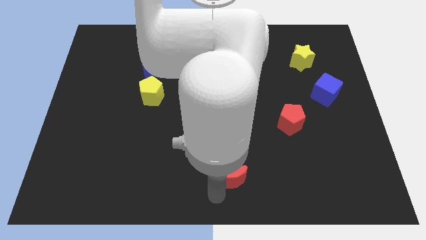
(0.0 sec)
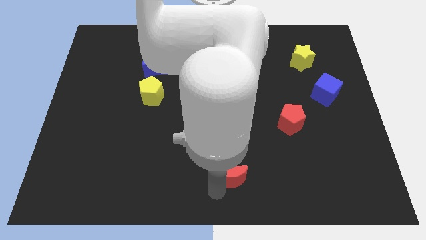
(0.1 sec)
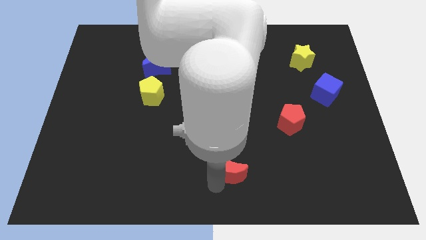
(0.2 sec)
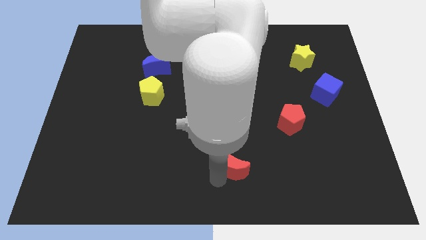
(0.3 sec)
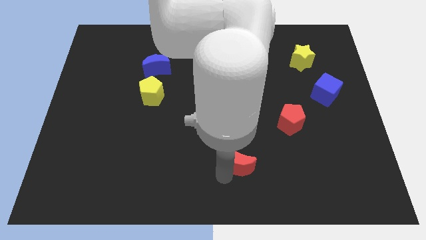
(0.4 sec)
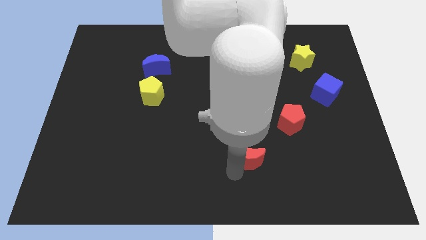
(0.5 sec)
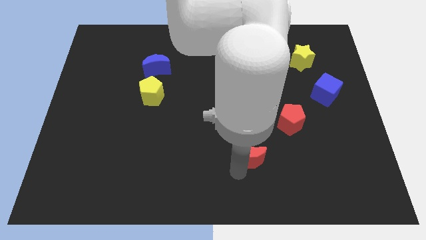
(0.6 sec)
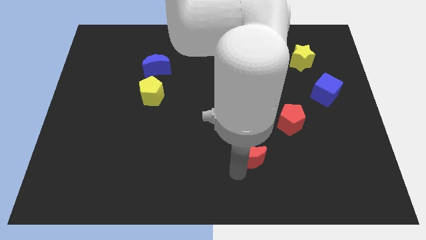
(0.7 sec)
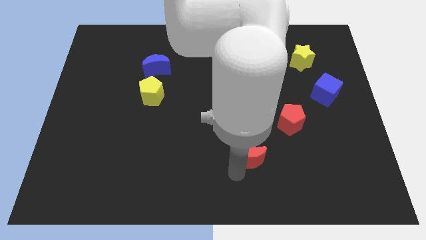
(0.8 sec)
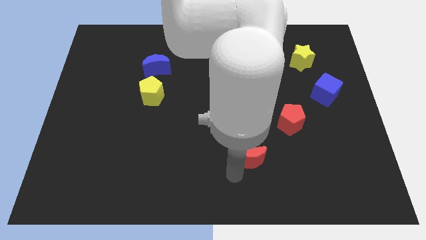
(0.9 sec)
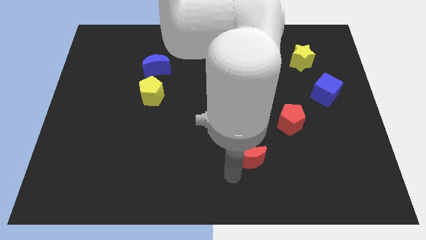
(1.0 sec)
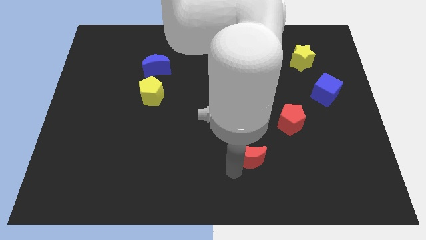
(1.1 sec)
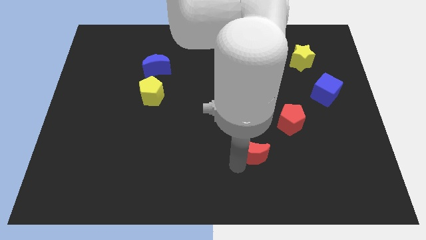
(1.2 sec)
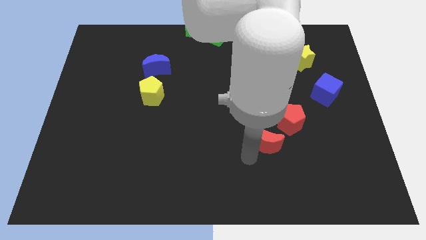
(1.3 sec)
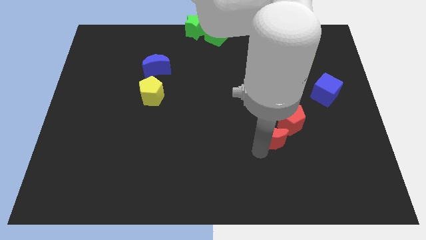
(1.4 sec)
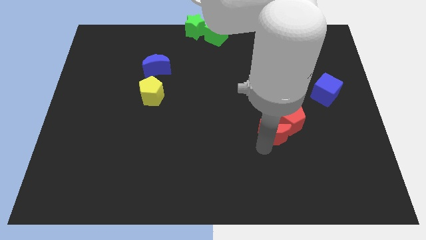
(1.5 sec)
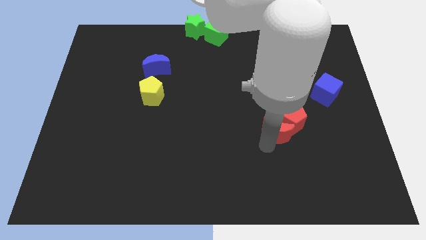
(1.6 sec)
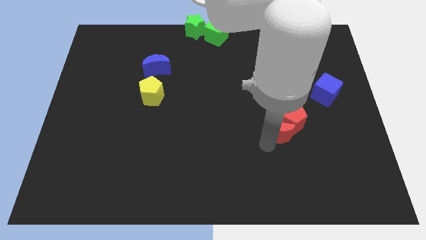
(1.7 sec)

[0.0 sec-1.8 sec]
push the red moon into the red pentagon

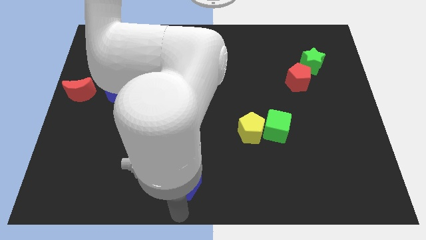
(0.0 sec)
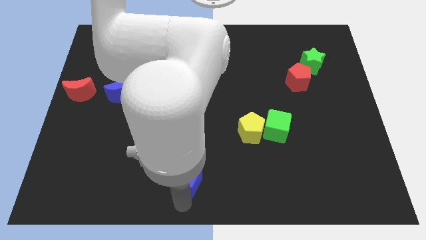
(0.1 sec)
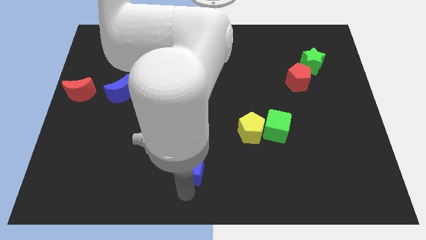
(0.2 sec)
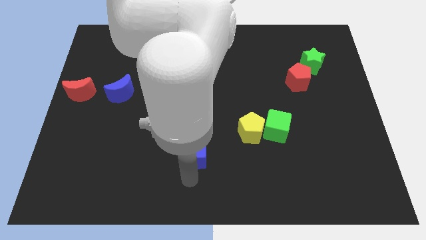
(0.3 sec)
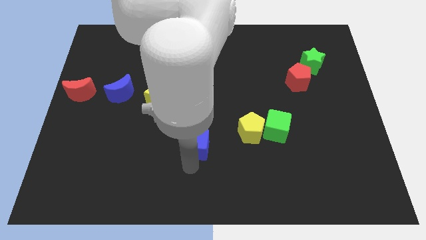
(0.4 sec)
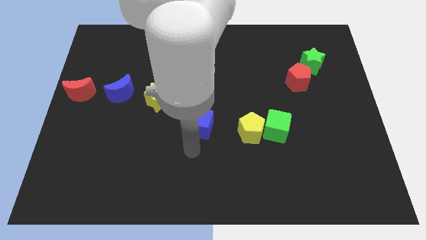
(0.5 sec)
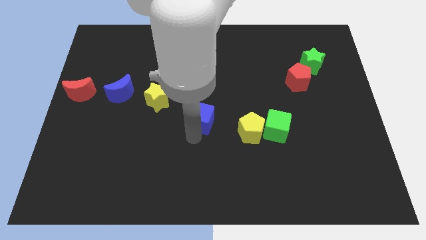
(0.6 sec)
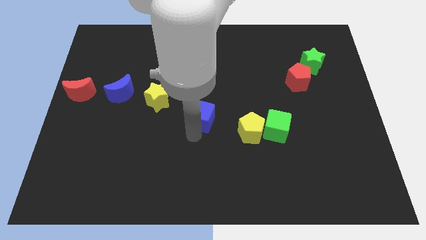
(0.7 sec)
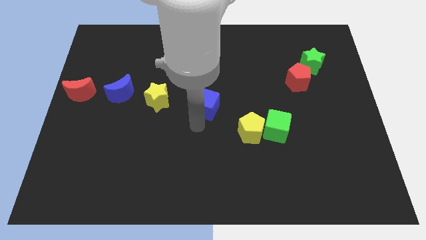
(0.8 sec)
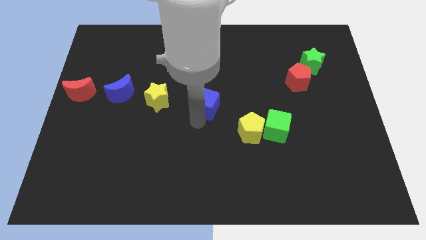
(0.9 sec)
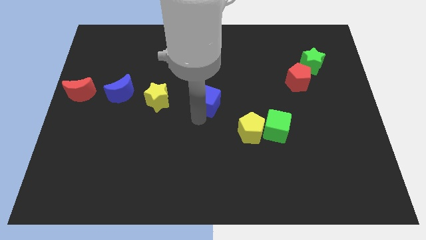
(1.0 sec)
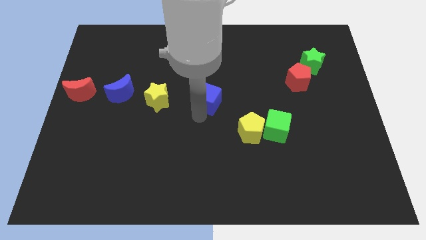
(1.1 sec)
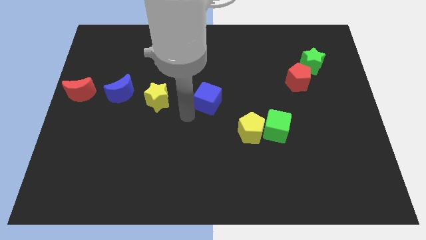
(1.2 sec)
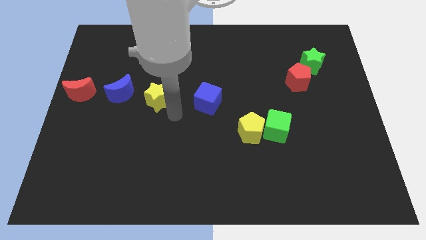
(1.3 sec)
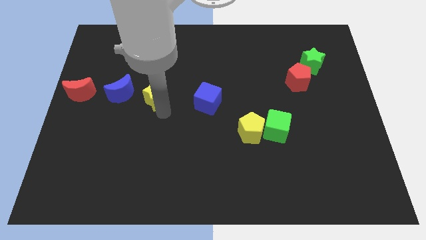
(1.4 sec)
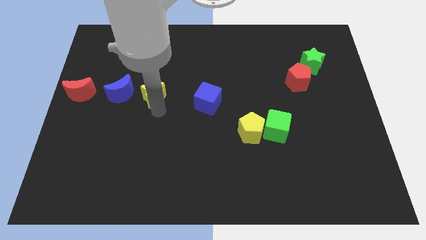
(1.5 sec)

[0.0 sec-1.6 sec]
put the blue cube to the right of the yellow star

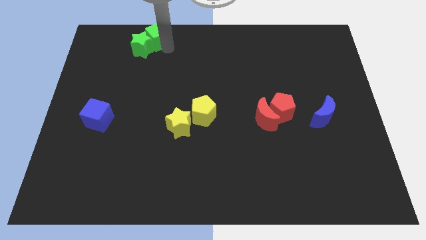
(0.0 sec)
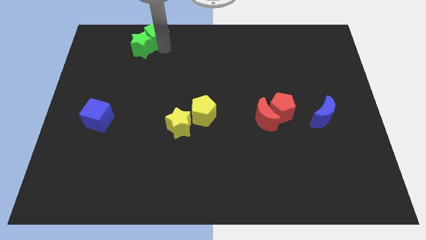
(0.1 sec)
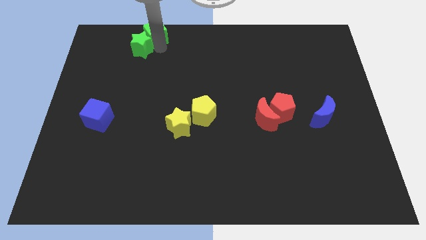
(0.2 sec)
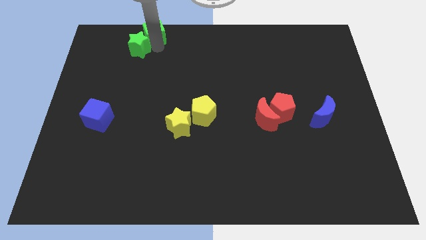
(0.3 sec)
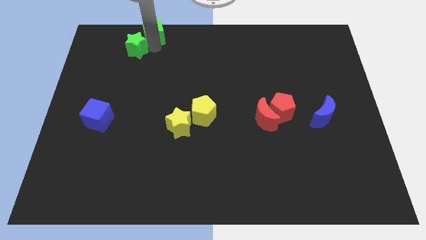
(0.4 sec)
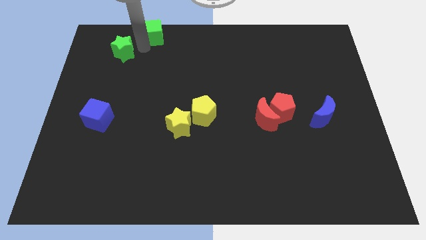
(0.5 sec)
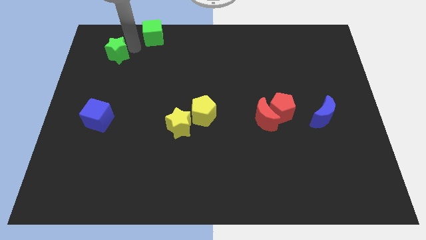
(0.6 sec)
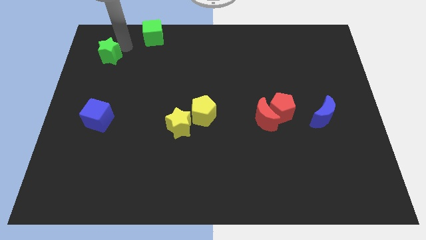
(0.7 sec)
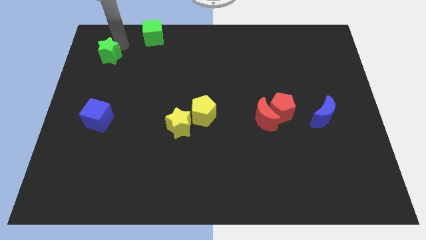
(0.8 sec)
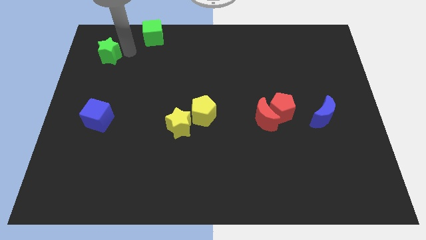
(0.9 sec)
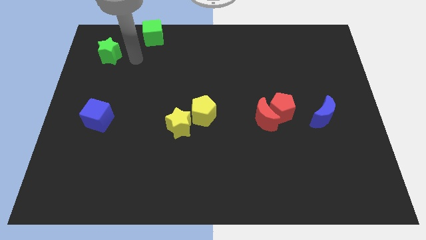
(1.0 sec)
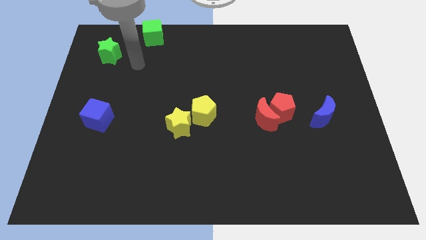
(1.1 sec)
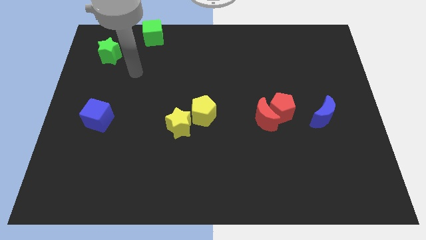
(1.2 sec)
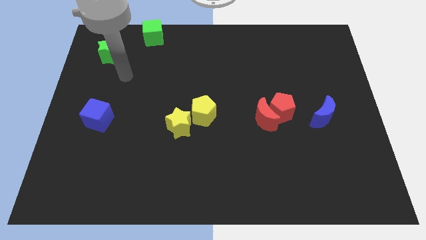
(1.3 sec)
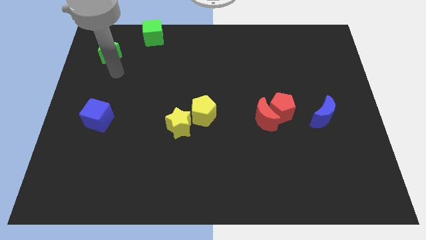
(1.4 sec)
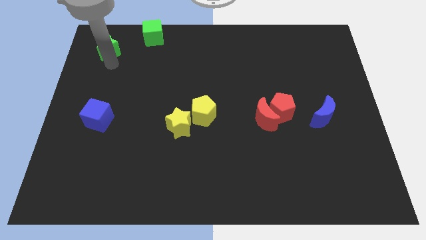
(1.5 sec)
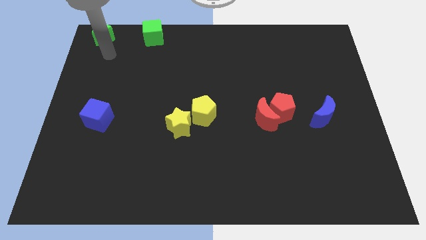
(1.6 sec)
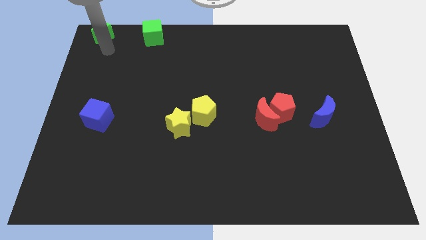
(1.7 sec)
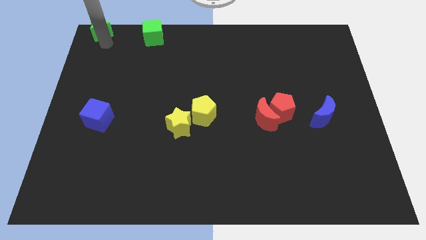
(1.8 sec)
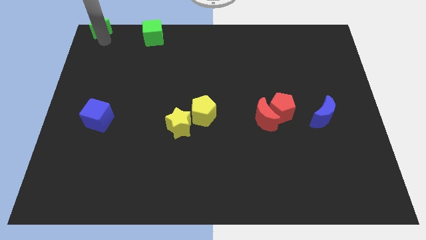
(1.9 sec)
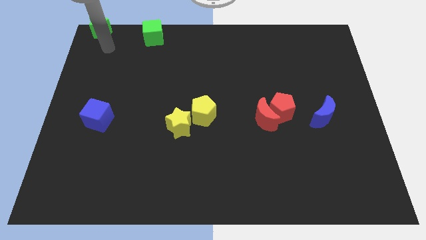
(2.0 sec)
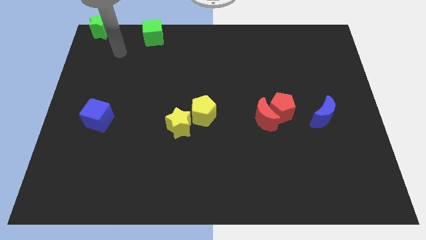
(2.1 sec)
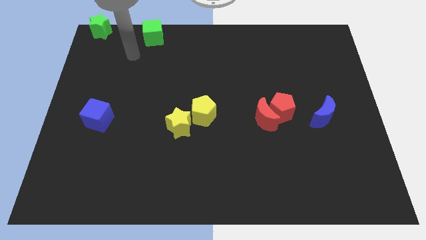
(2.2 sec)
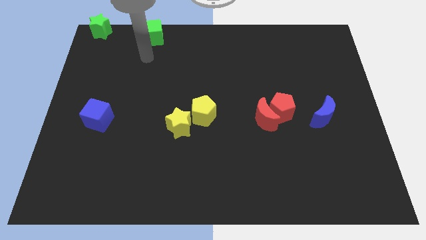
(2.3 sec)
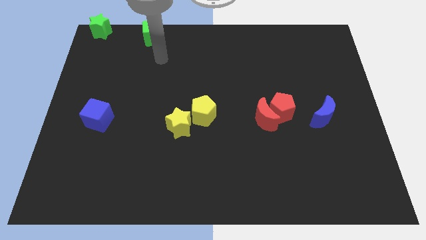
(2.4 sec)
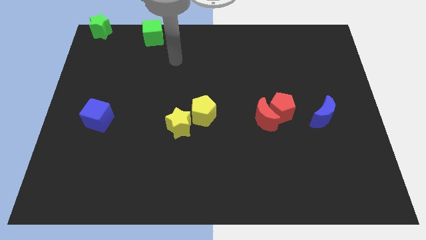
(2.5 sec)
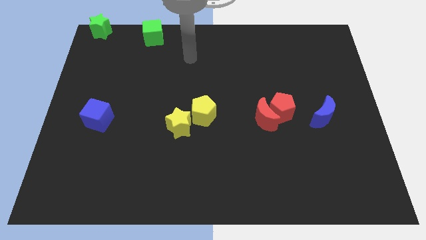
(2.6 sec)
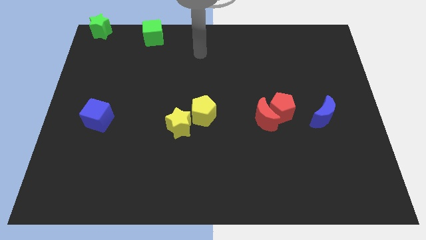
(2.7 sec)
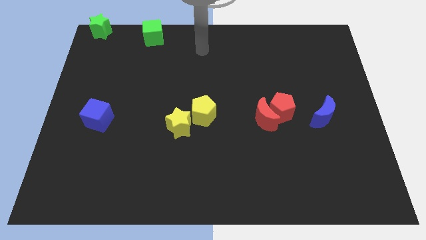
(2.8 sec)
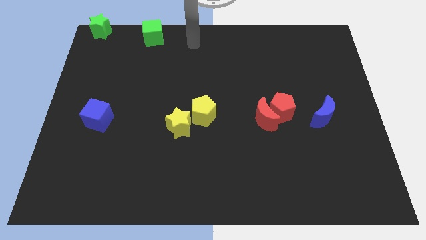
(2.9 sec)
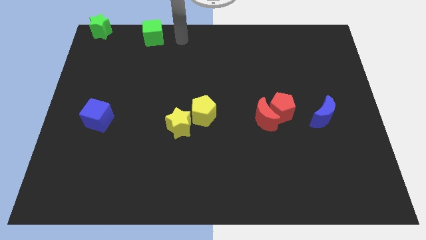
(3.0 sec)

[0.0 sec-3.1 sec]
move green star to the top left corner

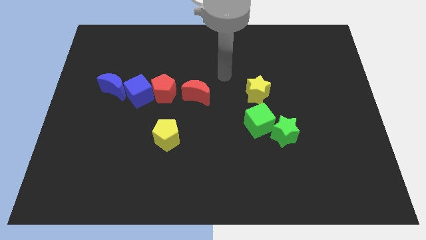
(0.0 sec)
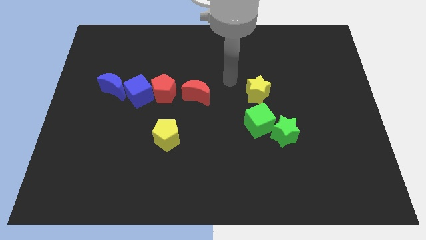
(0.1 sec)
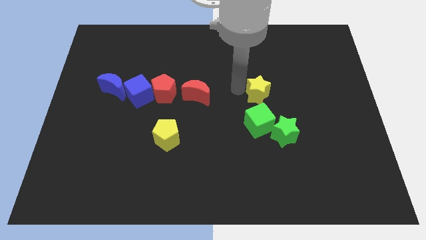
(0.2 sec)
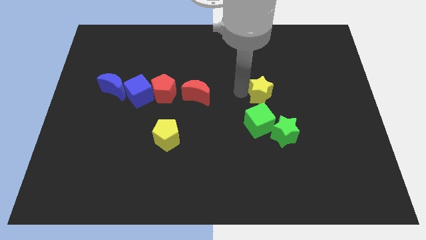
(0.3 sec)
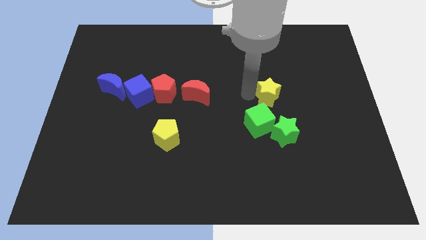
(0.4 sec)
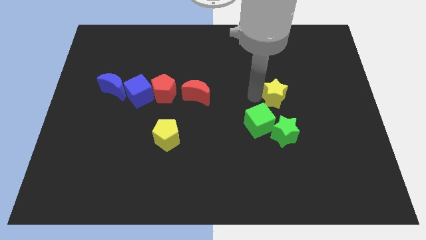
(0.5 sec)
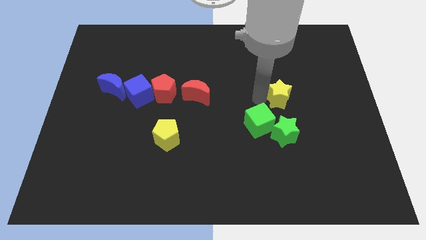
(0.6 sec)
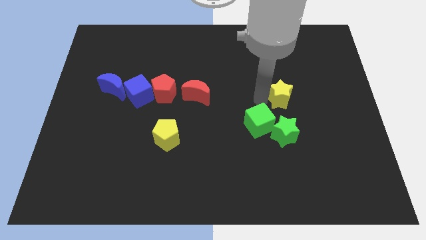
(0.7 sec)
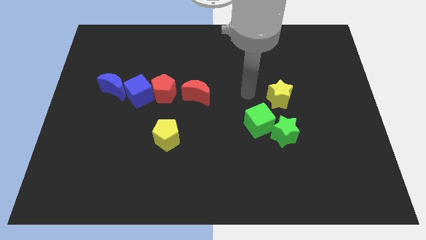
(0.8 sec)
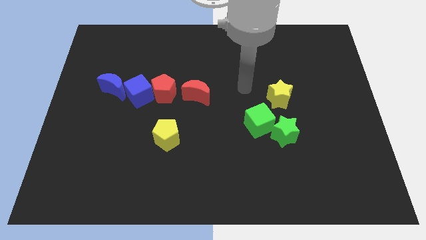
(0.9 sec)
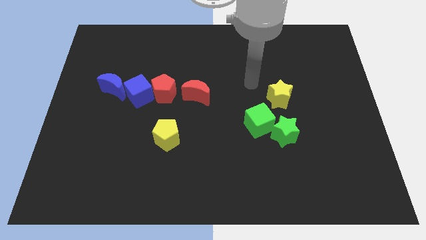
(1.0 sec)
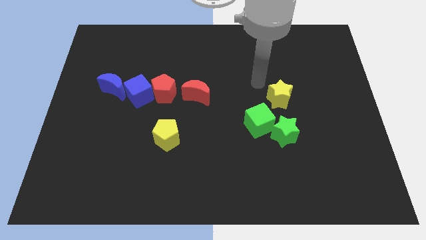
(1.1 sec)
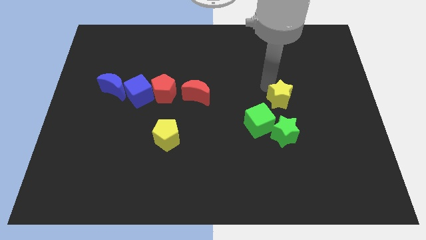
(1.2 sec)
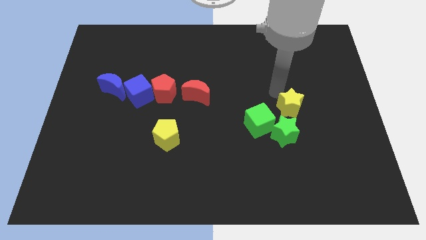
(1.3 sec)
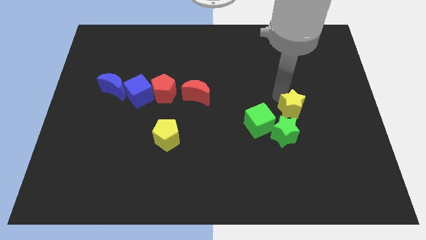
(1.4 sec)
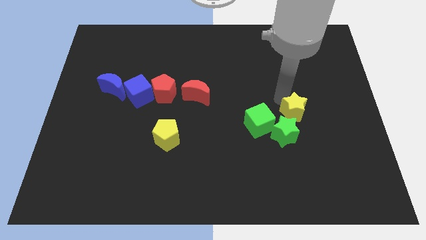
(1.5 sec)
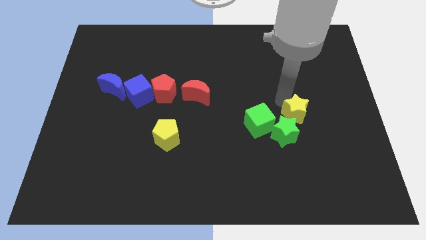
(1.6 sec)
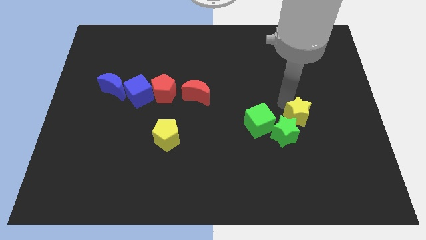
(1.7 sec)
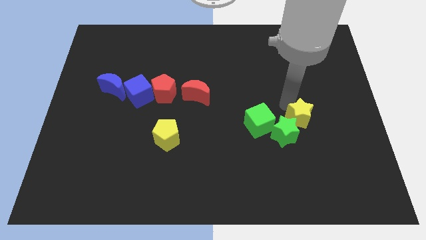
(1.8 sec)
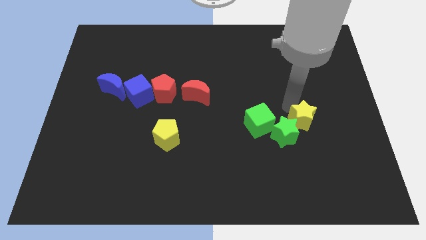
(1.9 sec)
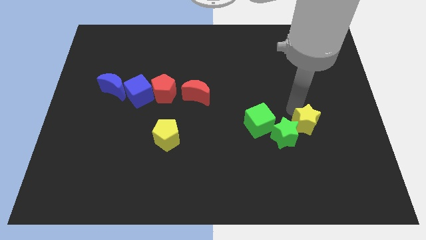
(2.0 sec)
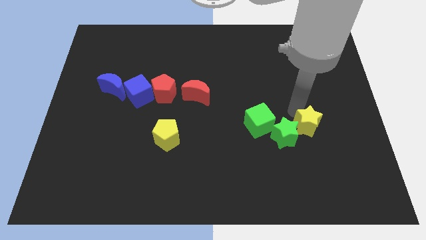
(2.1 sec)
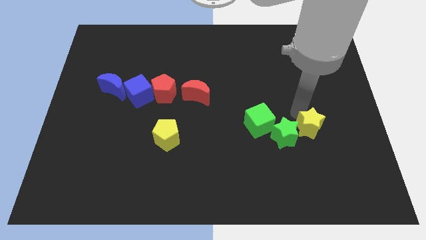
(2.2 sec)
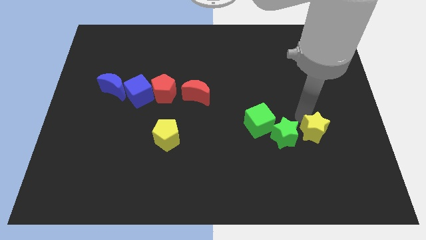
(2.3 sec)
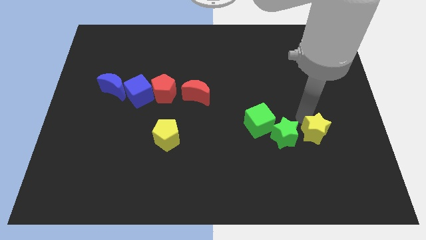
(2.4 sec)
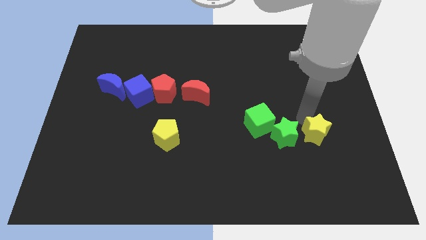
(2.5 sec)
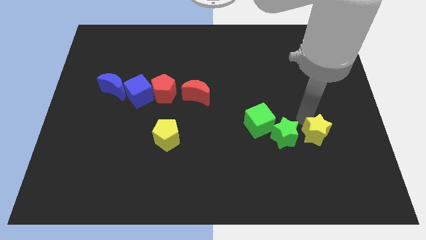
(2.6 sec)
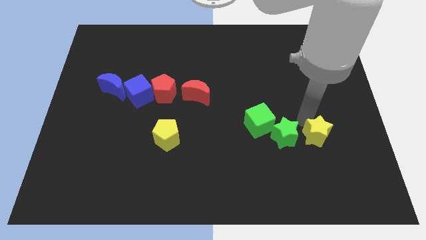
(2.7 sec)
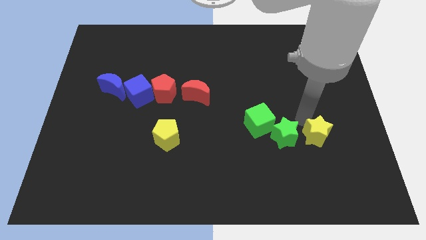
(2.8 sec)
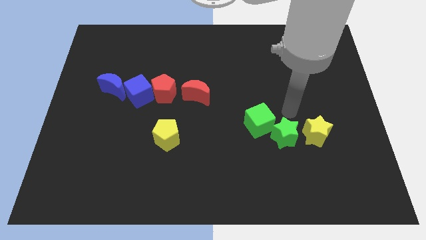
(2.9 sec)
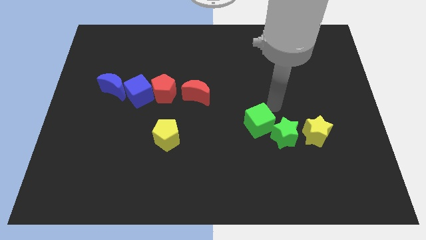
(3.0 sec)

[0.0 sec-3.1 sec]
drag the yellow star next to the green star
